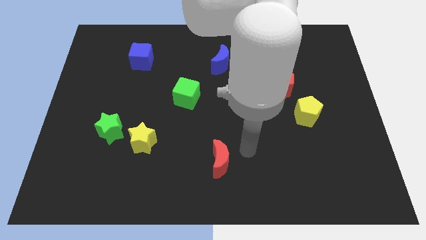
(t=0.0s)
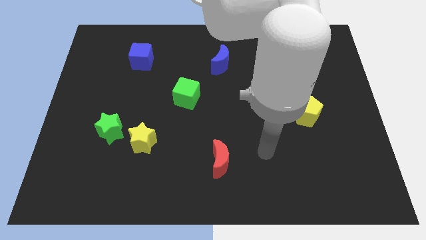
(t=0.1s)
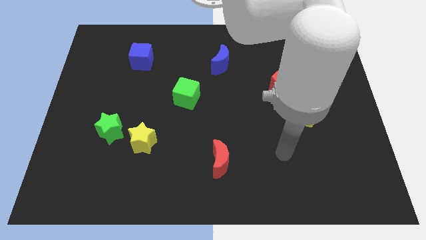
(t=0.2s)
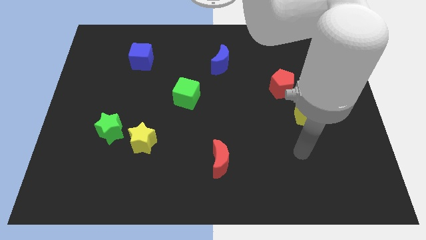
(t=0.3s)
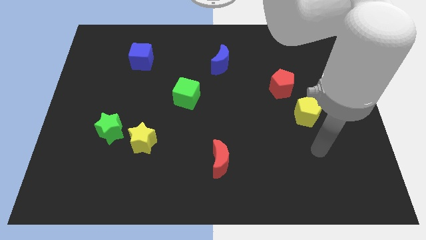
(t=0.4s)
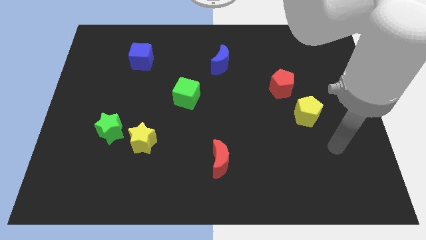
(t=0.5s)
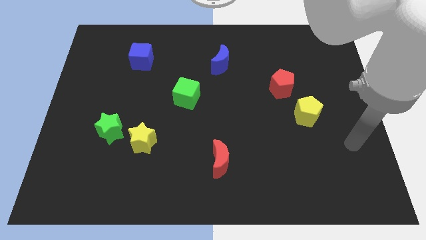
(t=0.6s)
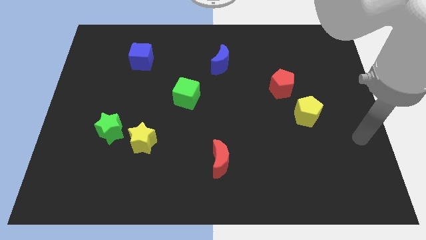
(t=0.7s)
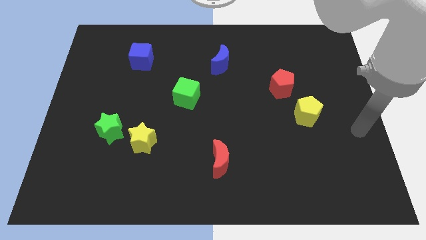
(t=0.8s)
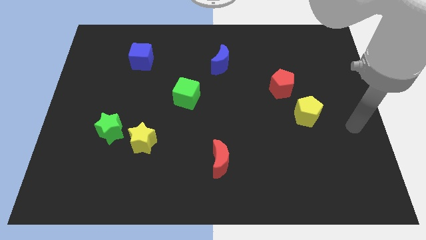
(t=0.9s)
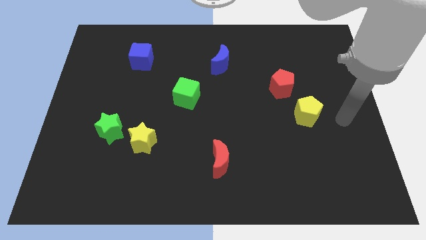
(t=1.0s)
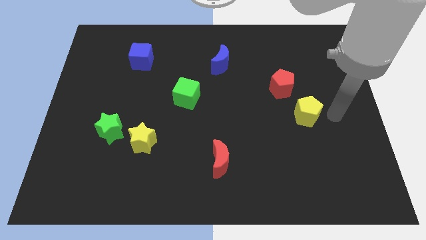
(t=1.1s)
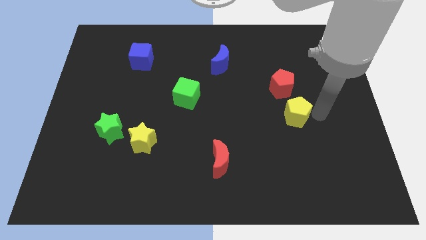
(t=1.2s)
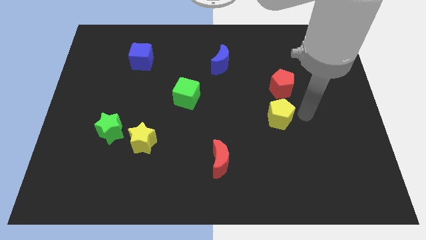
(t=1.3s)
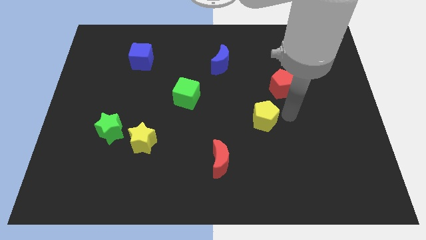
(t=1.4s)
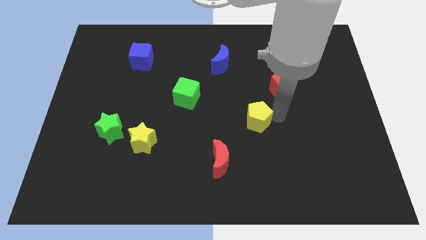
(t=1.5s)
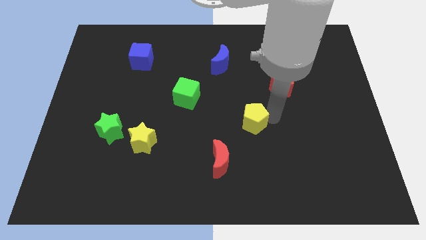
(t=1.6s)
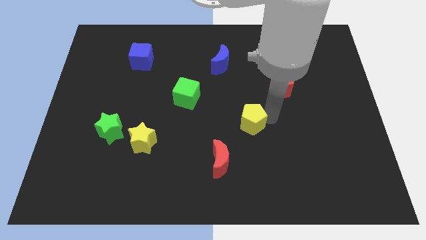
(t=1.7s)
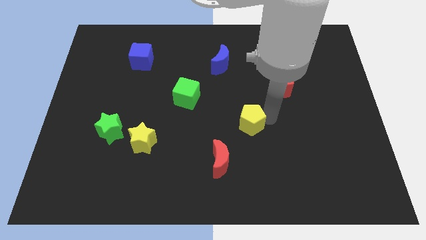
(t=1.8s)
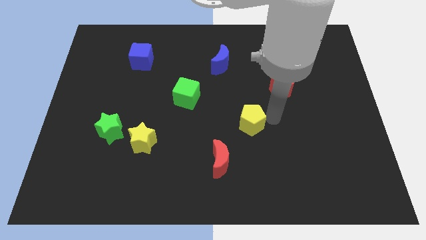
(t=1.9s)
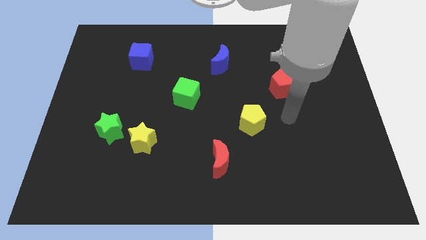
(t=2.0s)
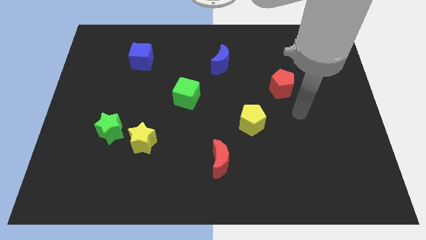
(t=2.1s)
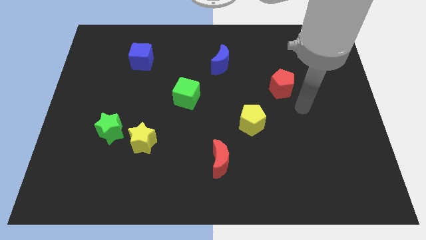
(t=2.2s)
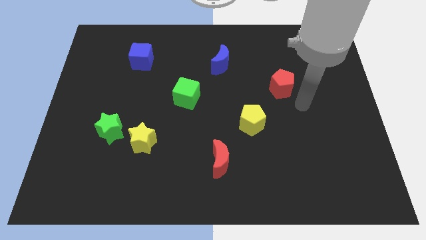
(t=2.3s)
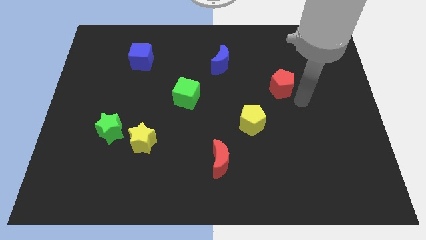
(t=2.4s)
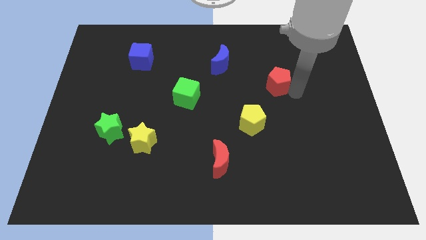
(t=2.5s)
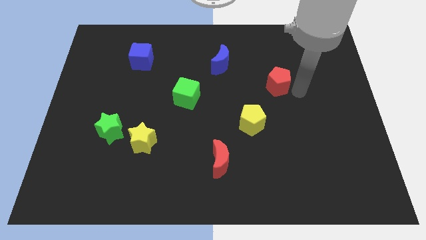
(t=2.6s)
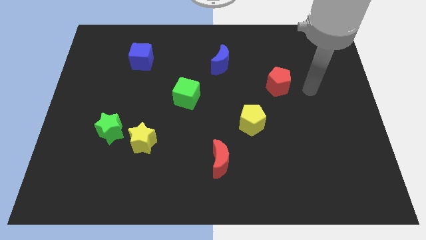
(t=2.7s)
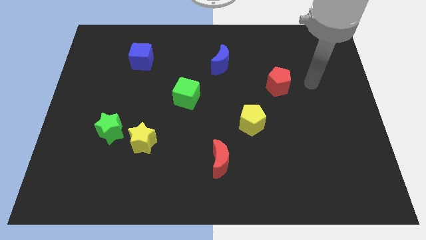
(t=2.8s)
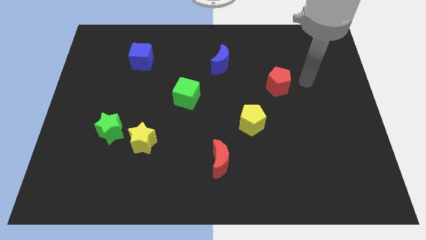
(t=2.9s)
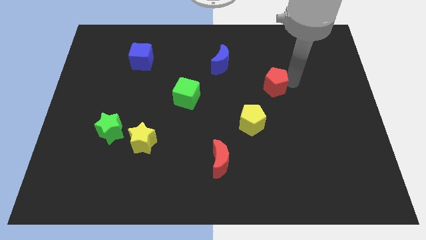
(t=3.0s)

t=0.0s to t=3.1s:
move the yellow pentagon in between the red blocks

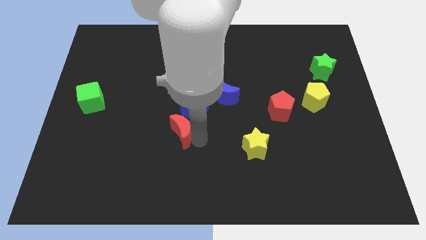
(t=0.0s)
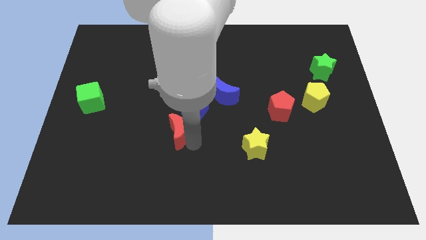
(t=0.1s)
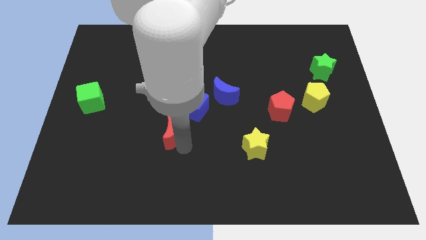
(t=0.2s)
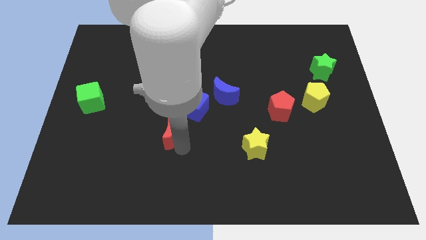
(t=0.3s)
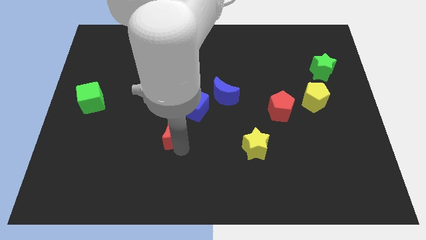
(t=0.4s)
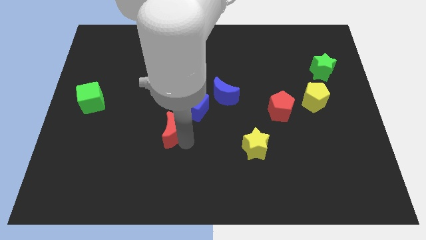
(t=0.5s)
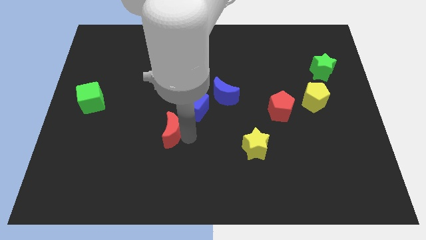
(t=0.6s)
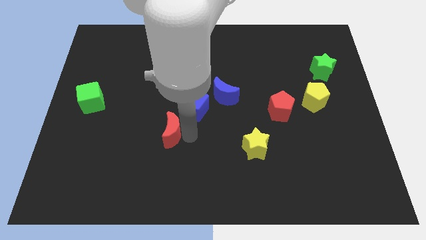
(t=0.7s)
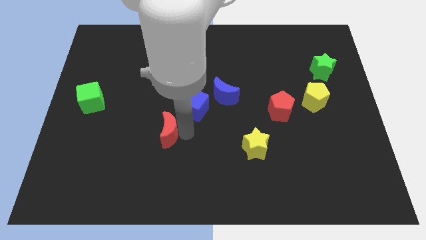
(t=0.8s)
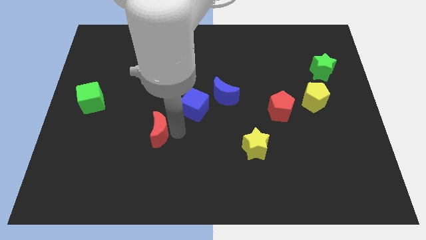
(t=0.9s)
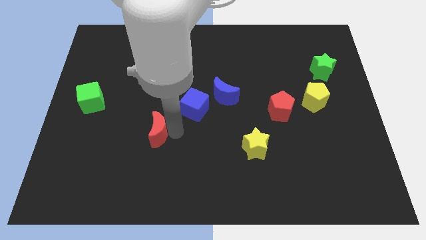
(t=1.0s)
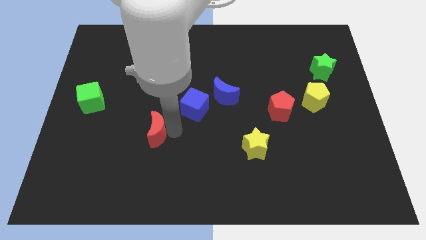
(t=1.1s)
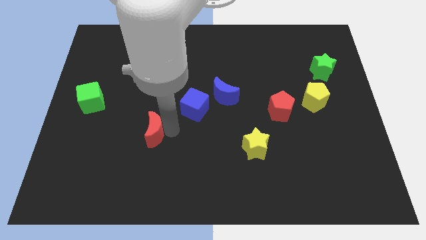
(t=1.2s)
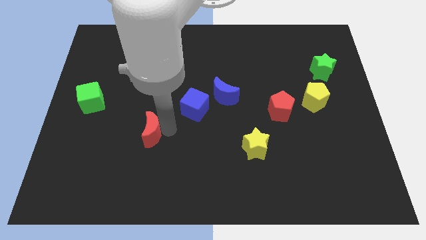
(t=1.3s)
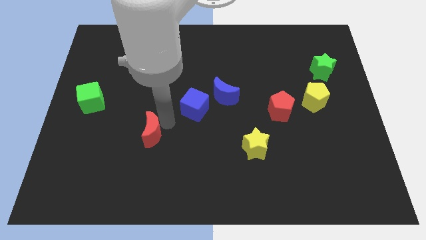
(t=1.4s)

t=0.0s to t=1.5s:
move the red moon towards the left

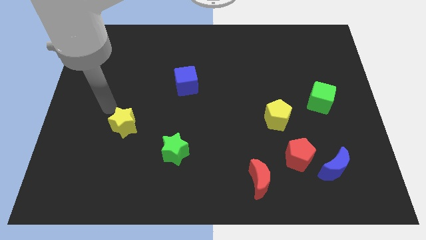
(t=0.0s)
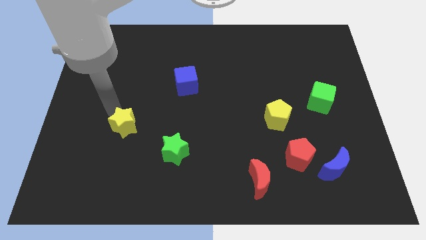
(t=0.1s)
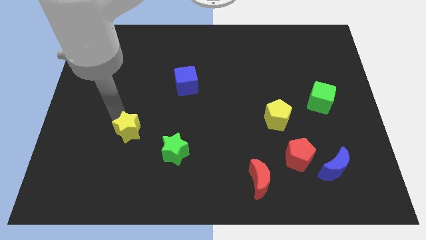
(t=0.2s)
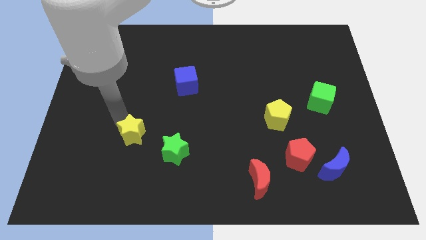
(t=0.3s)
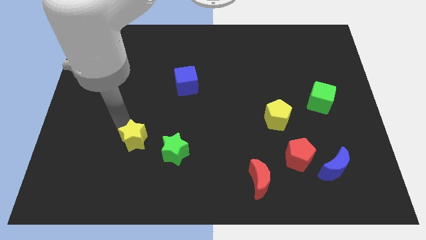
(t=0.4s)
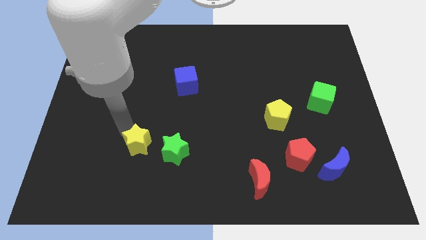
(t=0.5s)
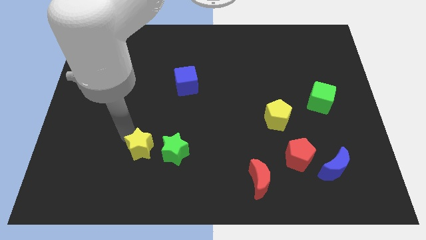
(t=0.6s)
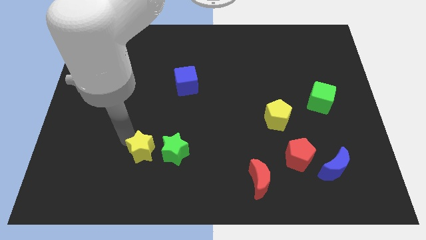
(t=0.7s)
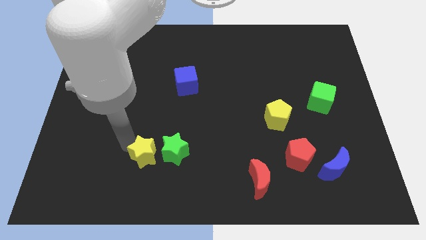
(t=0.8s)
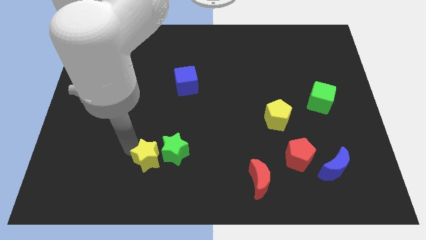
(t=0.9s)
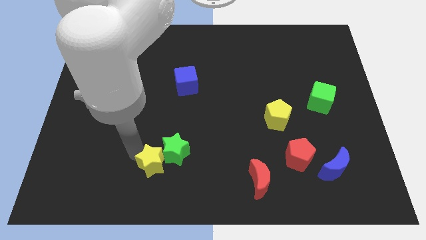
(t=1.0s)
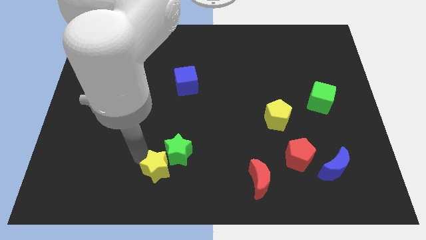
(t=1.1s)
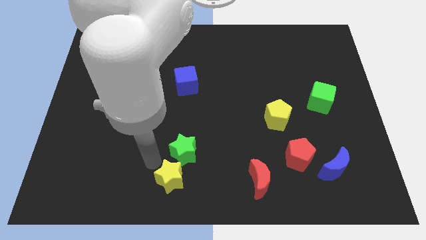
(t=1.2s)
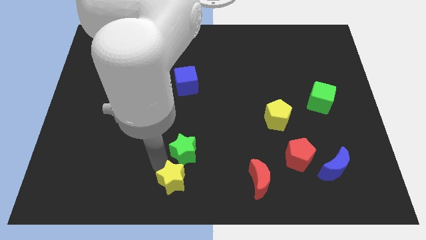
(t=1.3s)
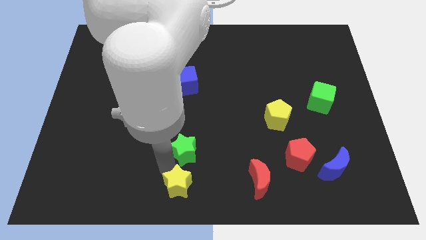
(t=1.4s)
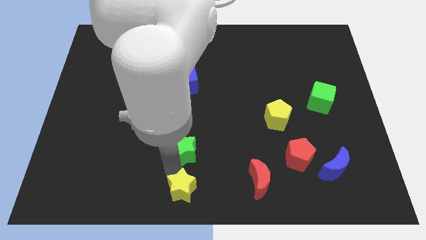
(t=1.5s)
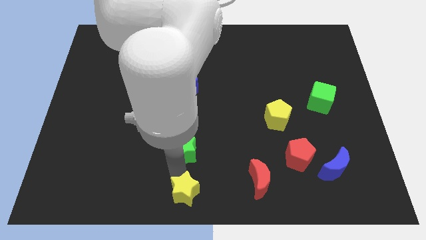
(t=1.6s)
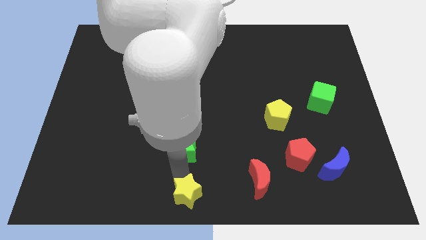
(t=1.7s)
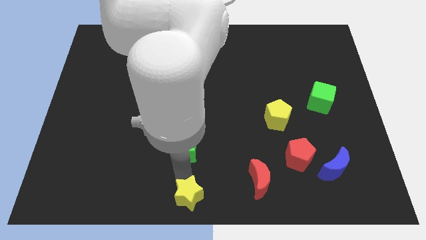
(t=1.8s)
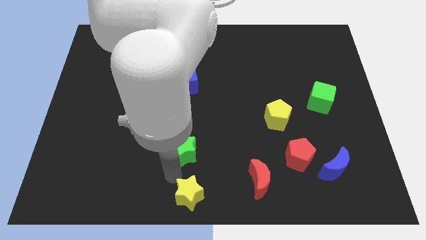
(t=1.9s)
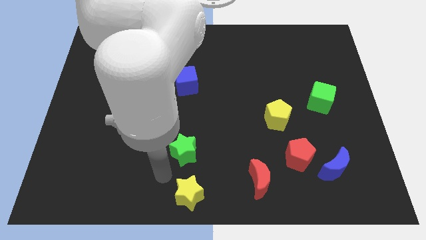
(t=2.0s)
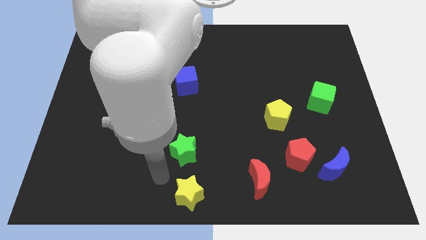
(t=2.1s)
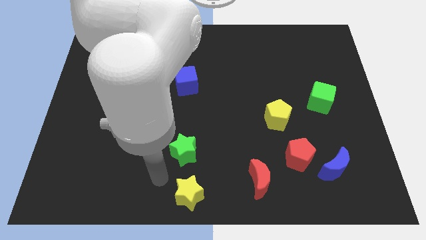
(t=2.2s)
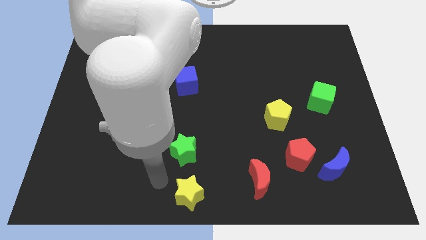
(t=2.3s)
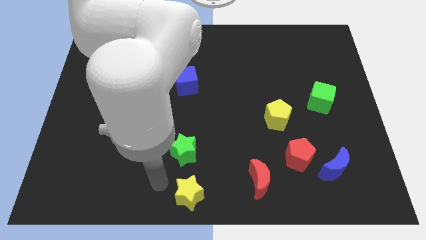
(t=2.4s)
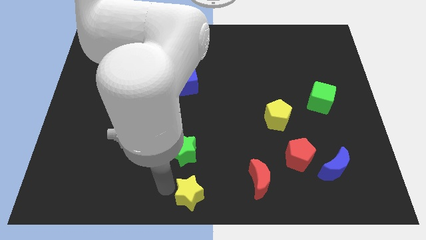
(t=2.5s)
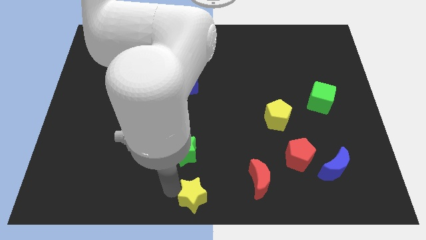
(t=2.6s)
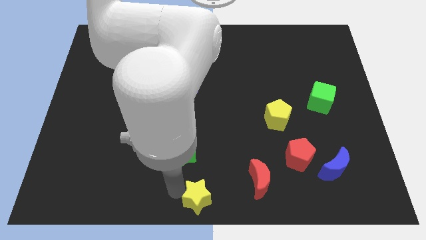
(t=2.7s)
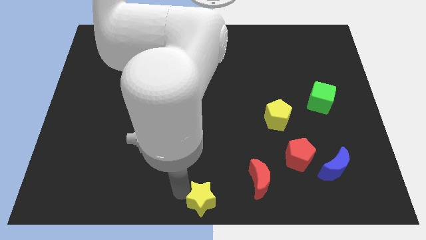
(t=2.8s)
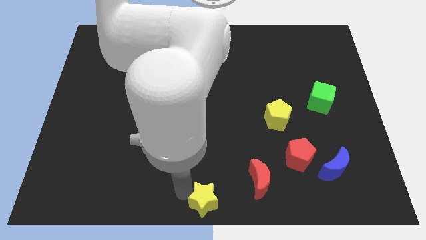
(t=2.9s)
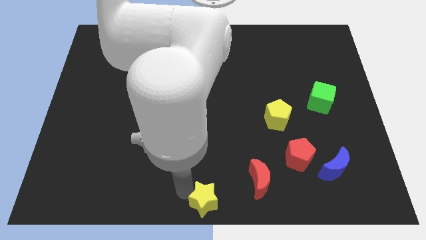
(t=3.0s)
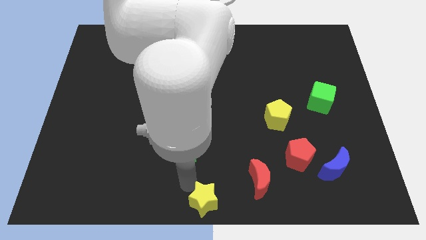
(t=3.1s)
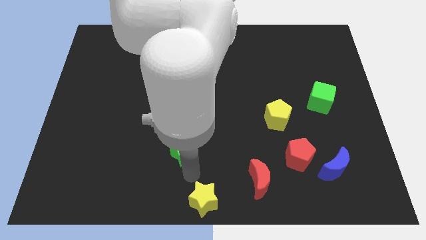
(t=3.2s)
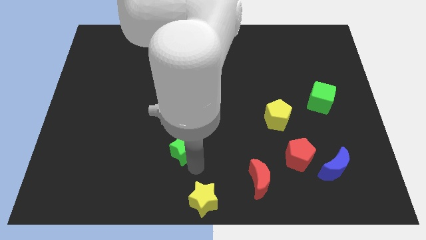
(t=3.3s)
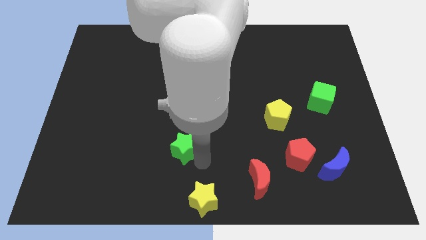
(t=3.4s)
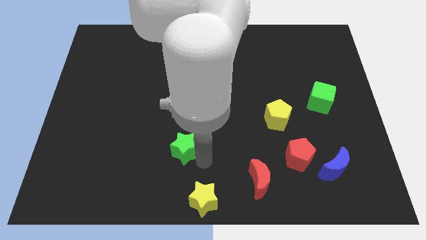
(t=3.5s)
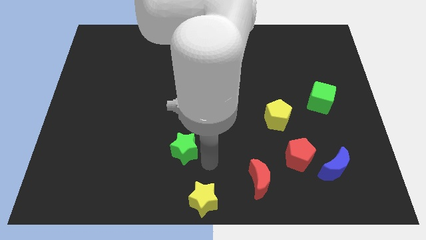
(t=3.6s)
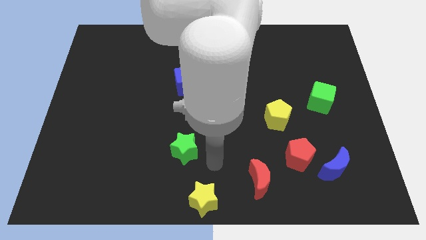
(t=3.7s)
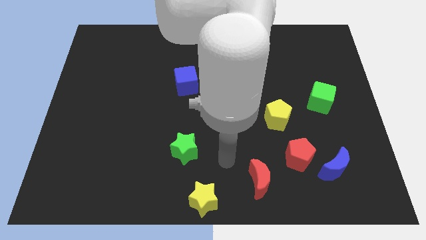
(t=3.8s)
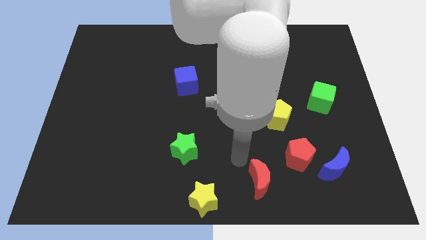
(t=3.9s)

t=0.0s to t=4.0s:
push the yellow star to the bottom center of the board

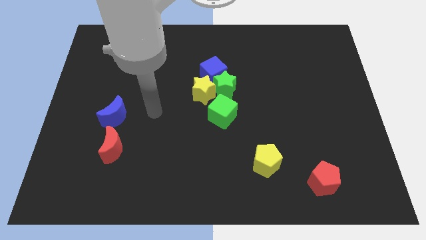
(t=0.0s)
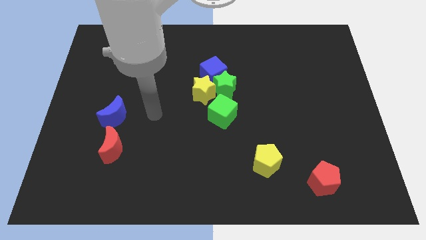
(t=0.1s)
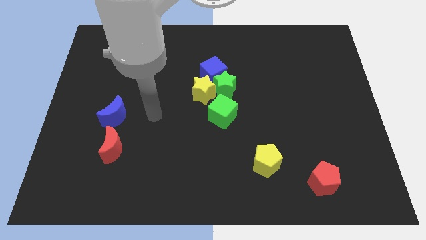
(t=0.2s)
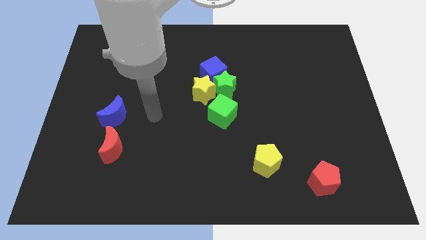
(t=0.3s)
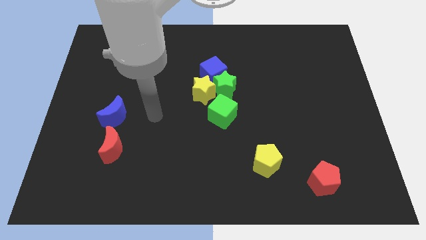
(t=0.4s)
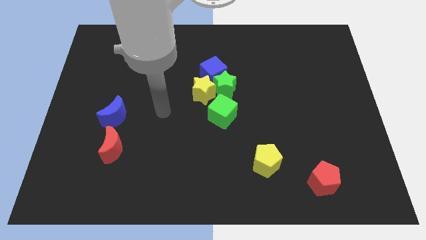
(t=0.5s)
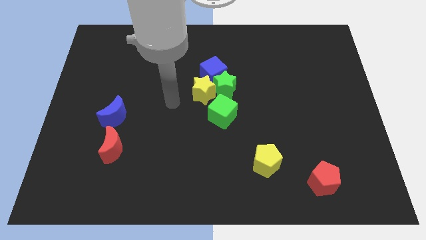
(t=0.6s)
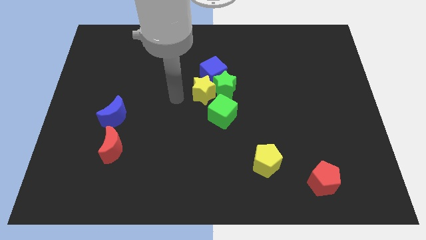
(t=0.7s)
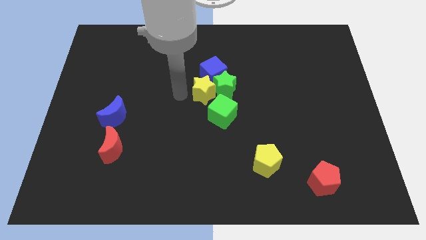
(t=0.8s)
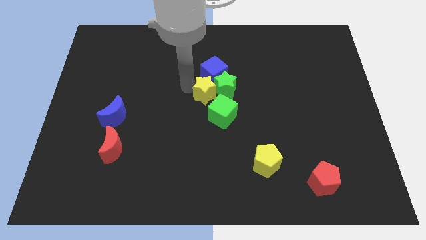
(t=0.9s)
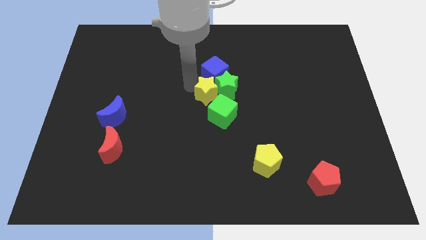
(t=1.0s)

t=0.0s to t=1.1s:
touch the top left side of yellow star
